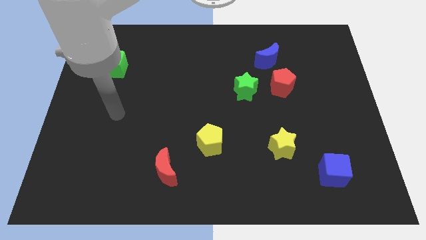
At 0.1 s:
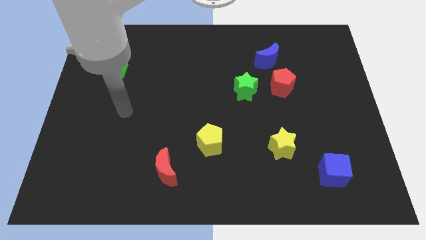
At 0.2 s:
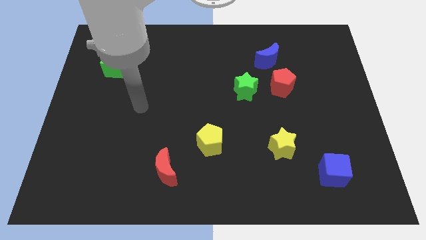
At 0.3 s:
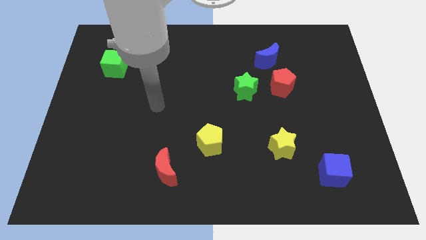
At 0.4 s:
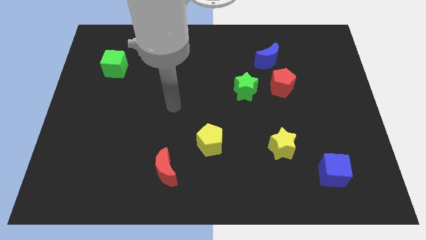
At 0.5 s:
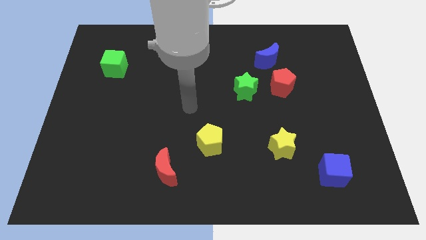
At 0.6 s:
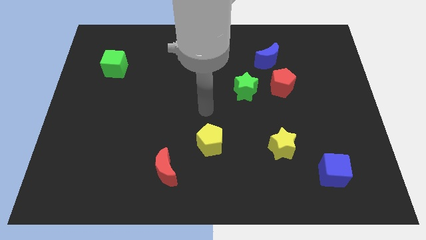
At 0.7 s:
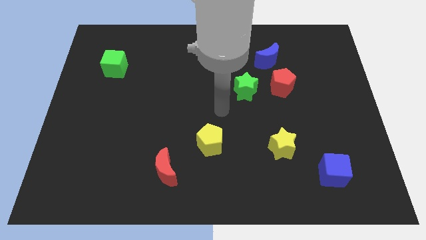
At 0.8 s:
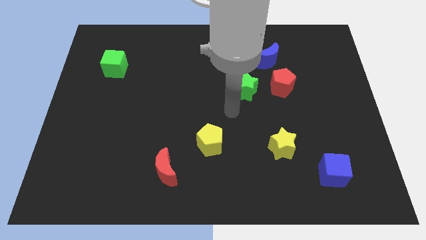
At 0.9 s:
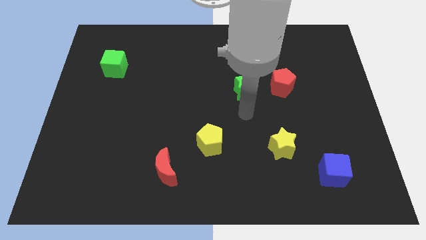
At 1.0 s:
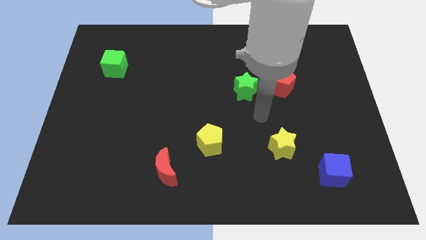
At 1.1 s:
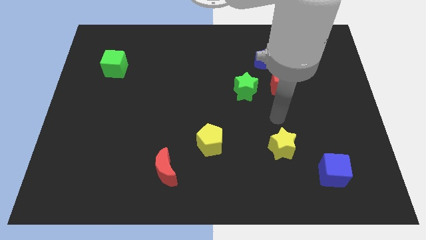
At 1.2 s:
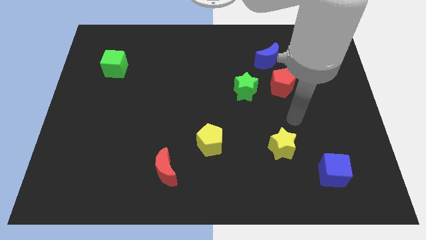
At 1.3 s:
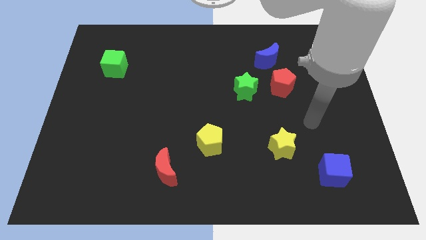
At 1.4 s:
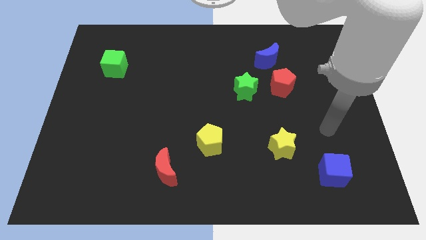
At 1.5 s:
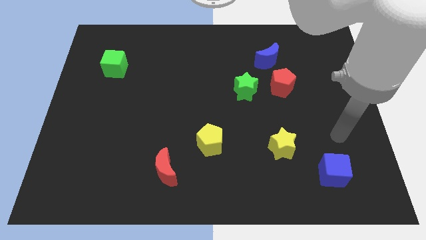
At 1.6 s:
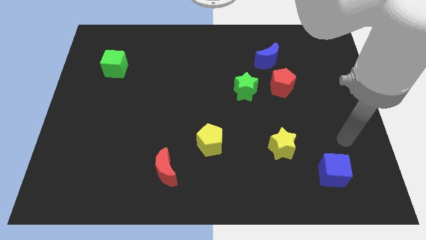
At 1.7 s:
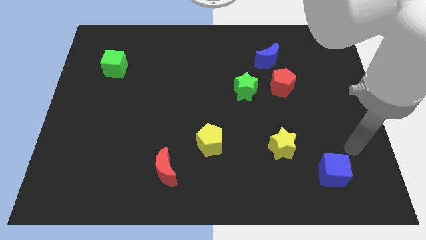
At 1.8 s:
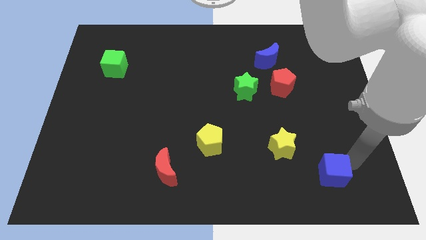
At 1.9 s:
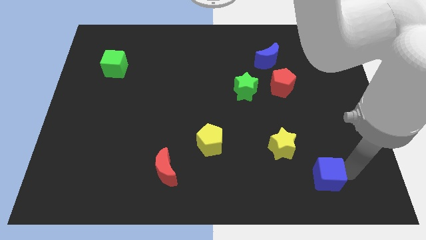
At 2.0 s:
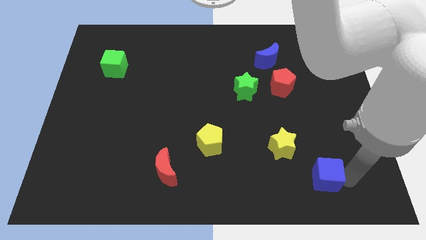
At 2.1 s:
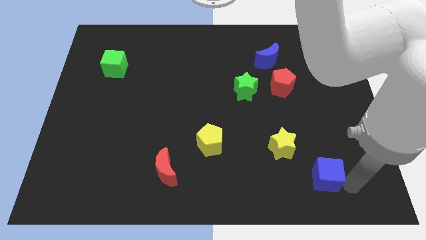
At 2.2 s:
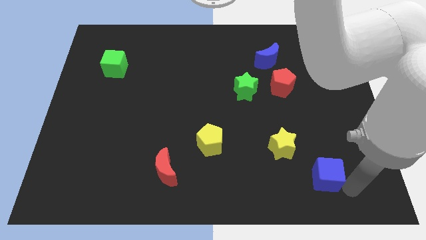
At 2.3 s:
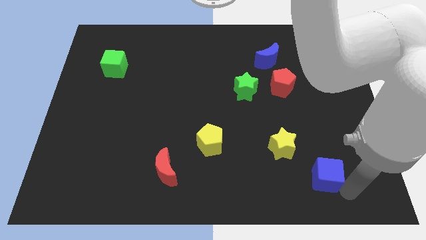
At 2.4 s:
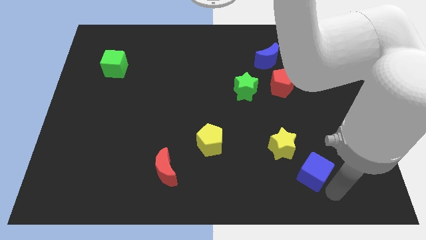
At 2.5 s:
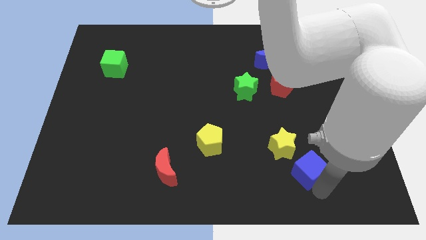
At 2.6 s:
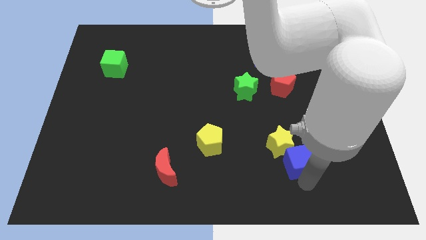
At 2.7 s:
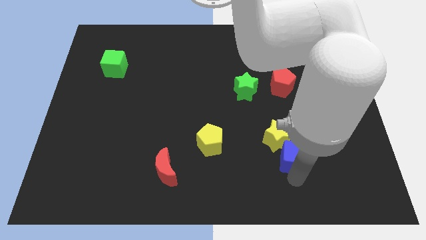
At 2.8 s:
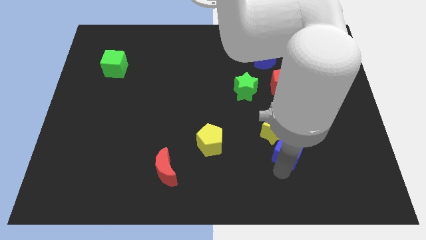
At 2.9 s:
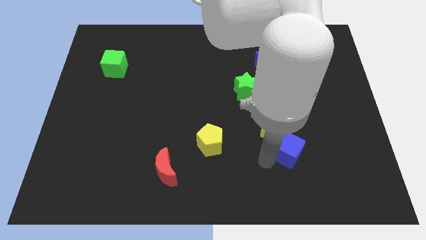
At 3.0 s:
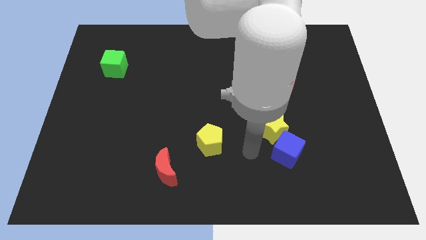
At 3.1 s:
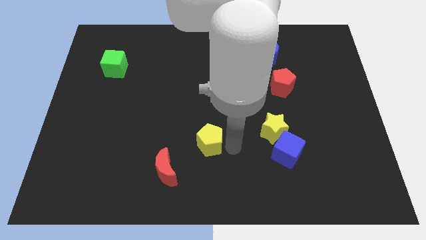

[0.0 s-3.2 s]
move the blue cube to the bottom right side of the yellow star

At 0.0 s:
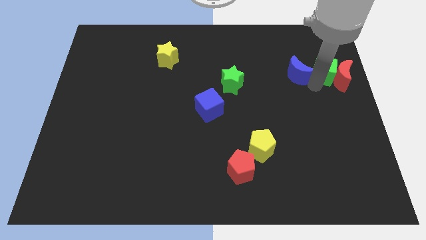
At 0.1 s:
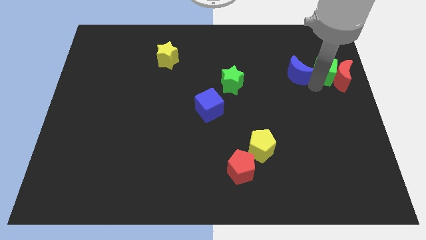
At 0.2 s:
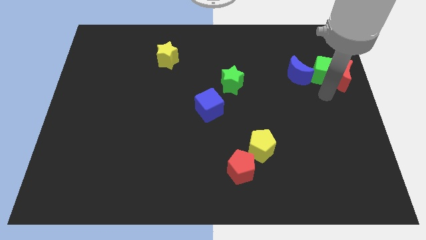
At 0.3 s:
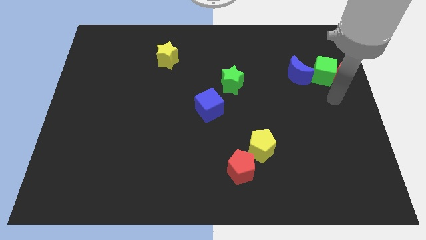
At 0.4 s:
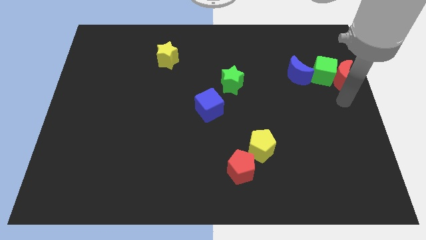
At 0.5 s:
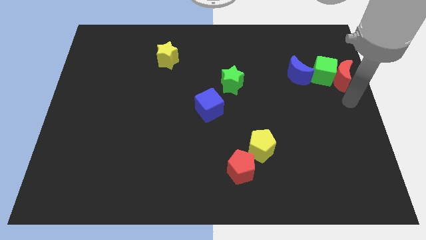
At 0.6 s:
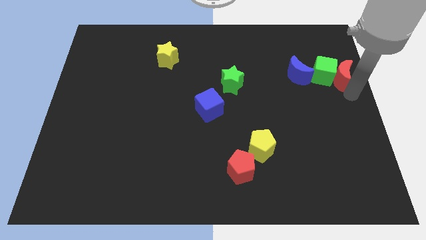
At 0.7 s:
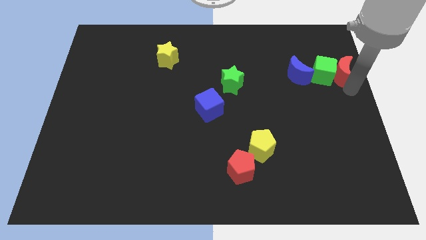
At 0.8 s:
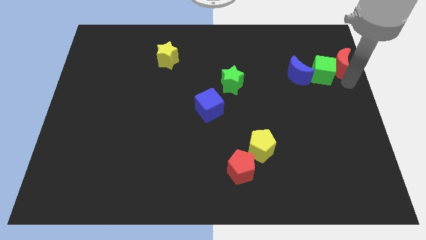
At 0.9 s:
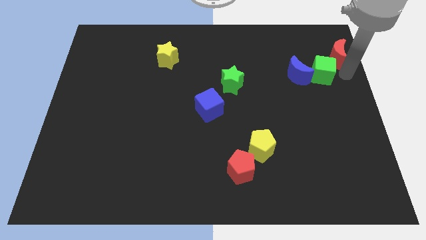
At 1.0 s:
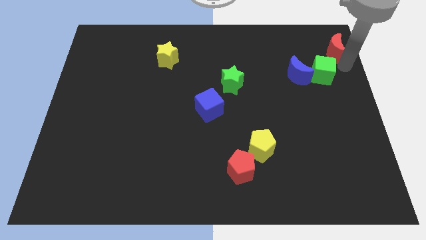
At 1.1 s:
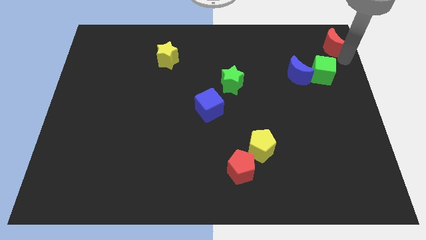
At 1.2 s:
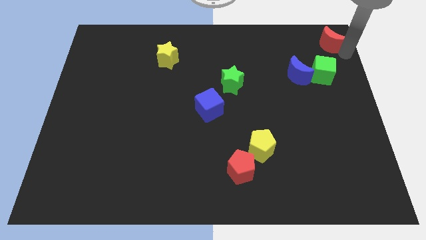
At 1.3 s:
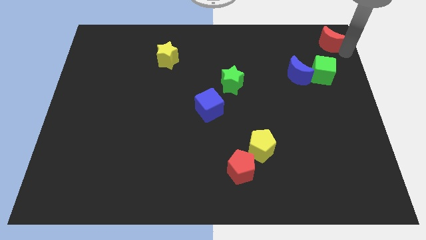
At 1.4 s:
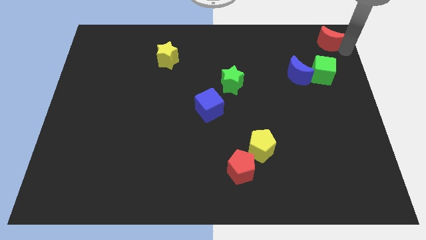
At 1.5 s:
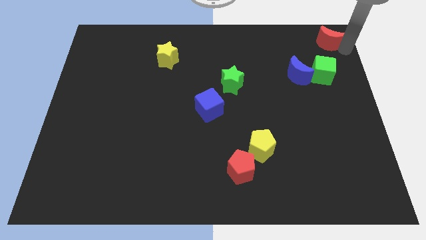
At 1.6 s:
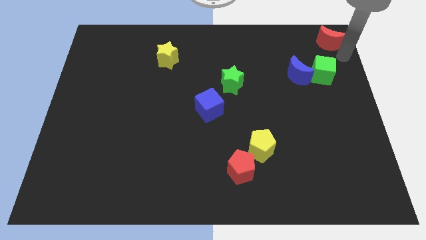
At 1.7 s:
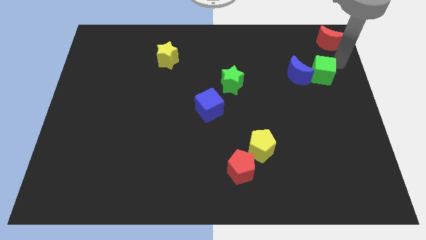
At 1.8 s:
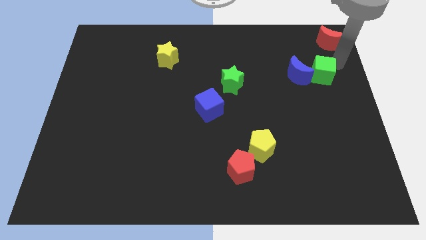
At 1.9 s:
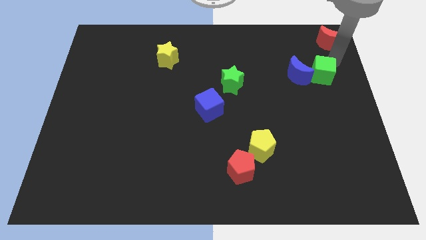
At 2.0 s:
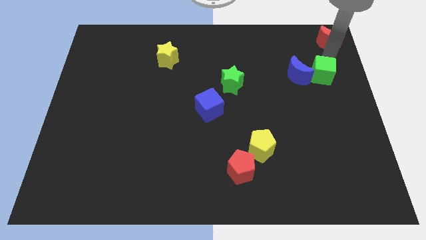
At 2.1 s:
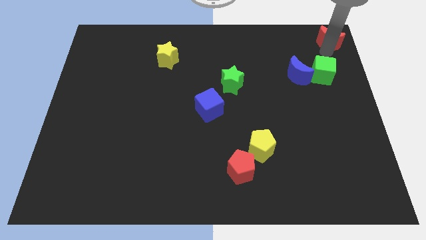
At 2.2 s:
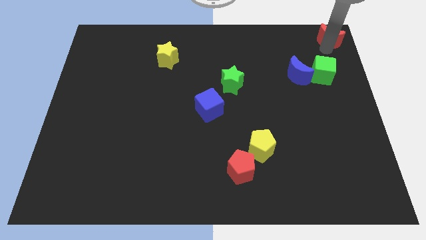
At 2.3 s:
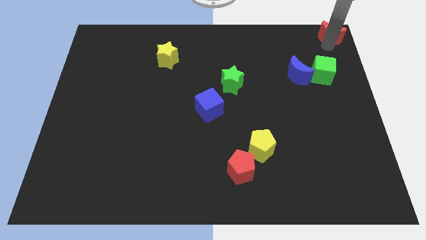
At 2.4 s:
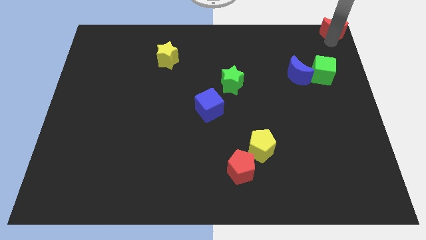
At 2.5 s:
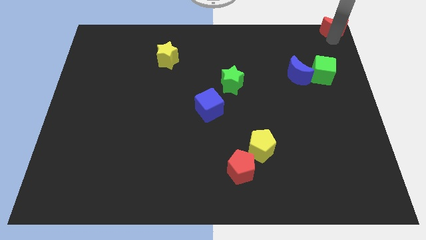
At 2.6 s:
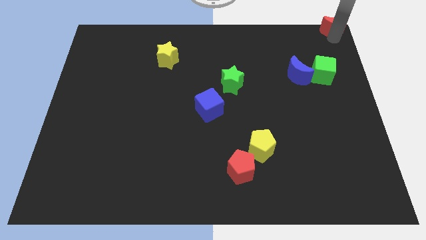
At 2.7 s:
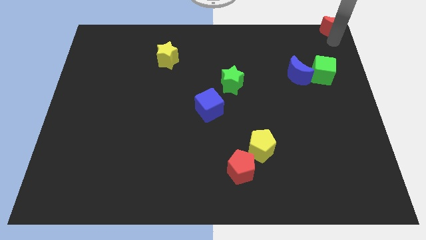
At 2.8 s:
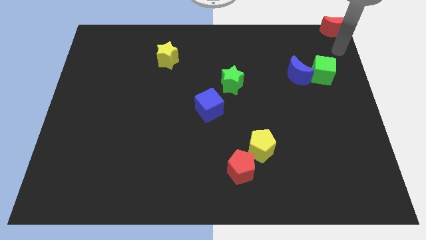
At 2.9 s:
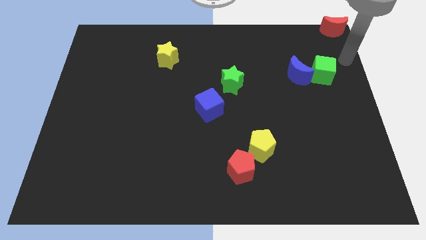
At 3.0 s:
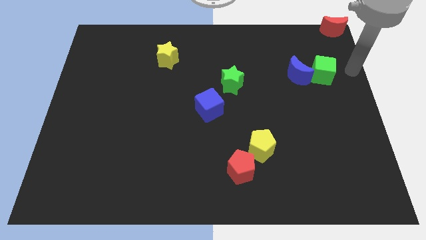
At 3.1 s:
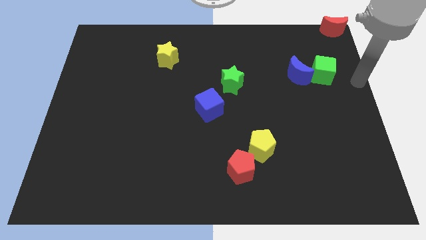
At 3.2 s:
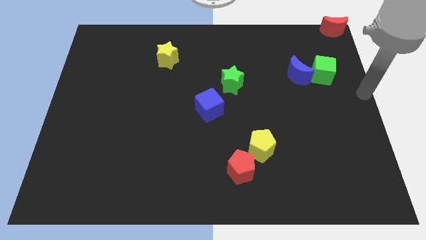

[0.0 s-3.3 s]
place red moon to the top right corner of the board

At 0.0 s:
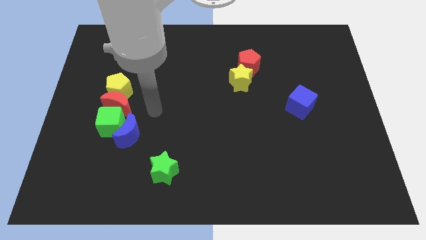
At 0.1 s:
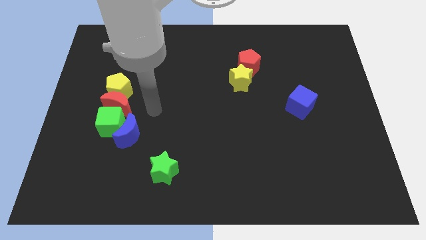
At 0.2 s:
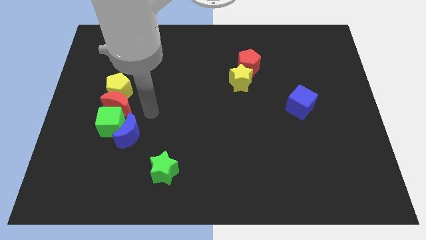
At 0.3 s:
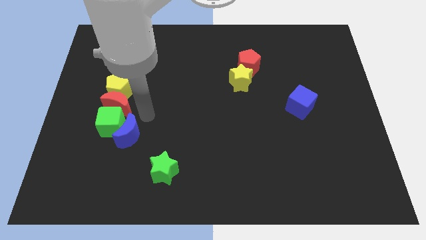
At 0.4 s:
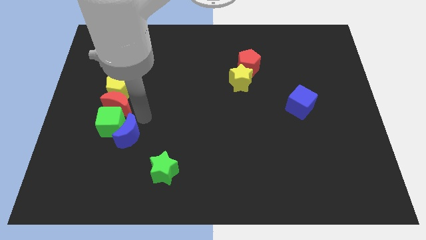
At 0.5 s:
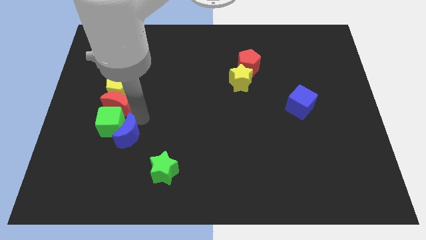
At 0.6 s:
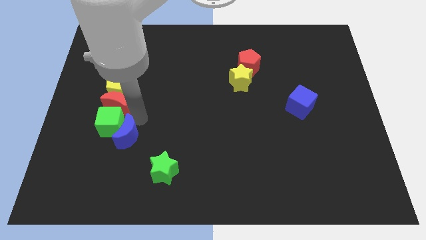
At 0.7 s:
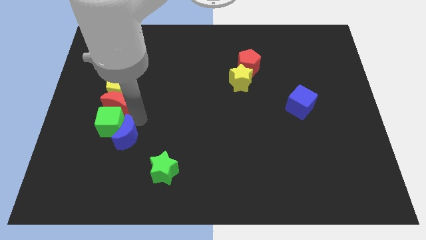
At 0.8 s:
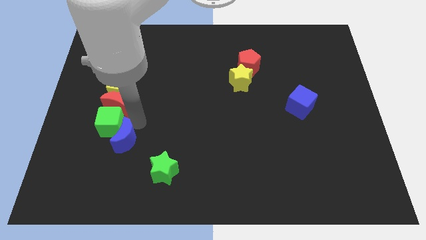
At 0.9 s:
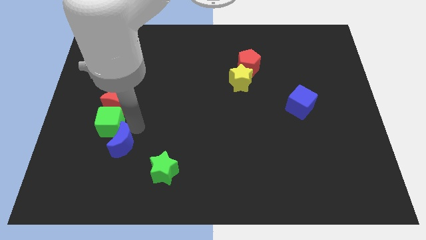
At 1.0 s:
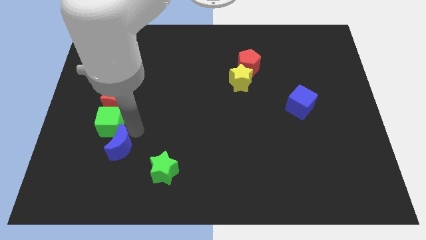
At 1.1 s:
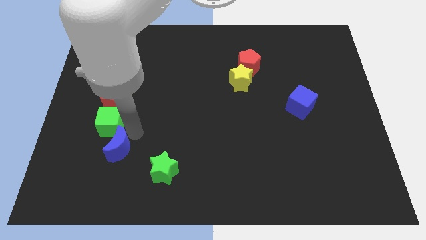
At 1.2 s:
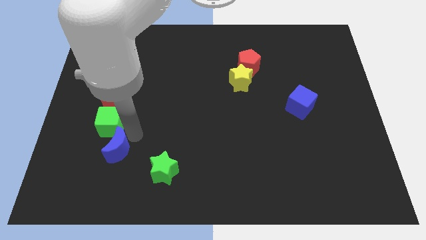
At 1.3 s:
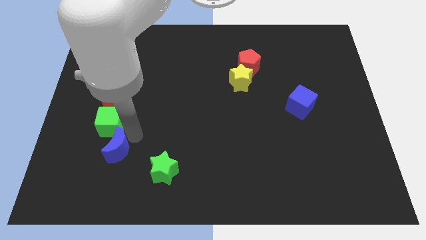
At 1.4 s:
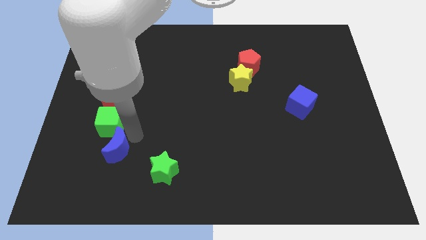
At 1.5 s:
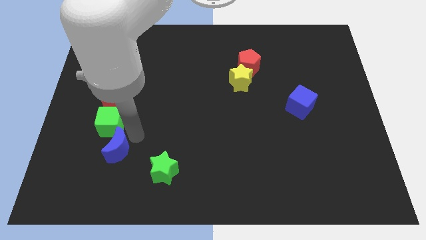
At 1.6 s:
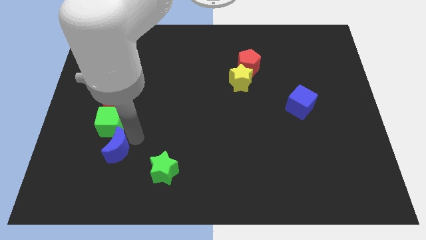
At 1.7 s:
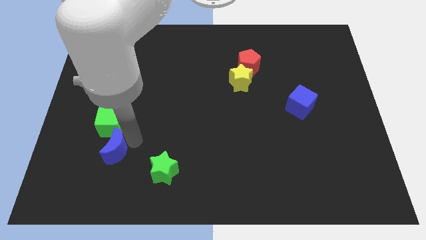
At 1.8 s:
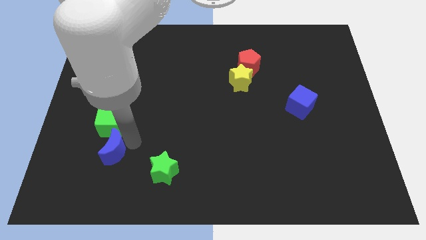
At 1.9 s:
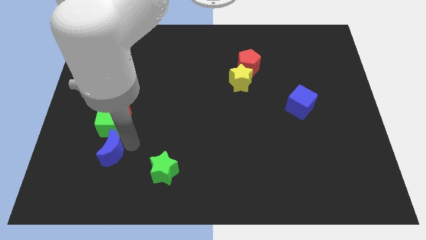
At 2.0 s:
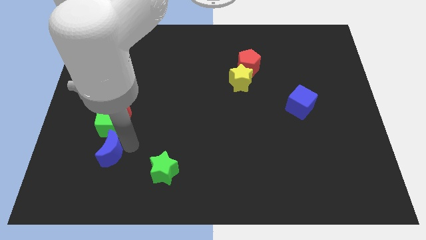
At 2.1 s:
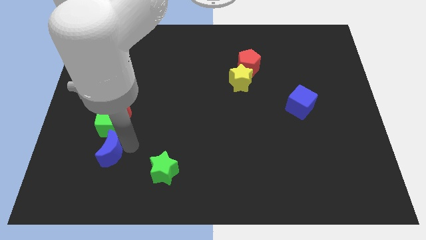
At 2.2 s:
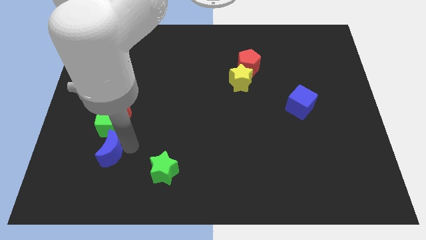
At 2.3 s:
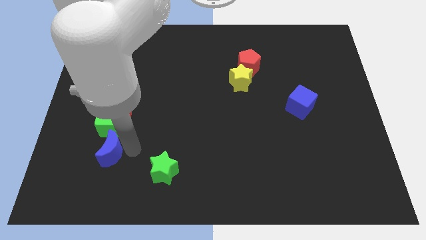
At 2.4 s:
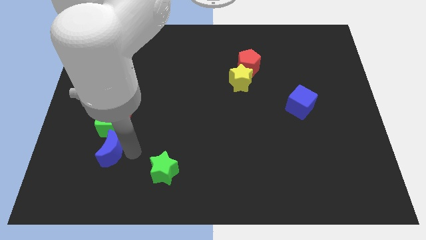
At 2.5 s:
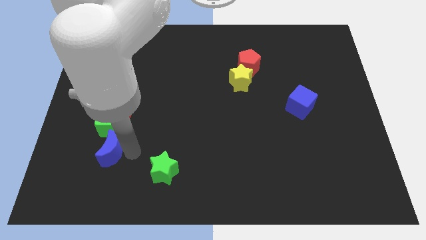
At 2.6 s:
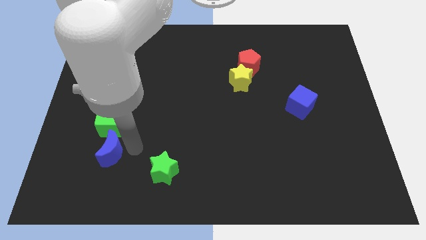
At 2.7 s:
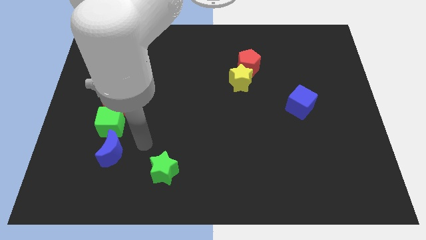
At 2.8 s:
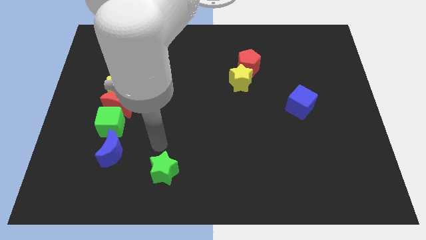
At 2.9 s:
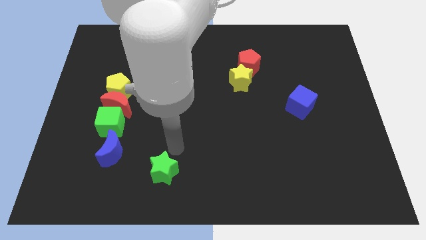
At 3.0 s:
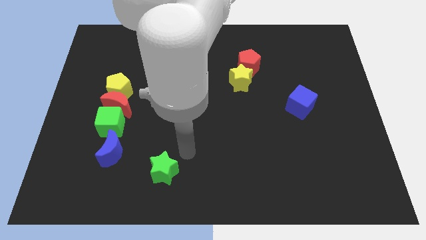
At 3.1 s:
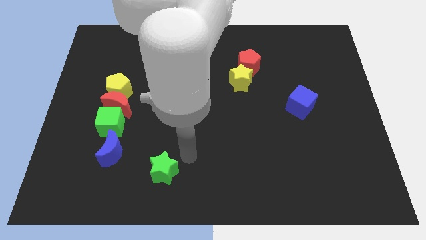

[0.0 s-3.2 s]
place blue moon below green cube
